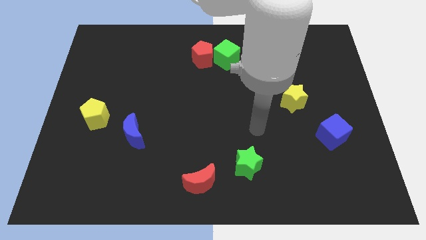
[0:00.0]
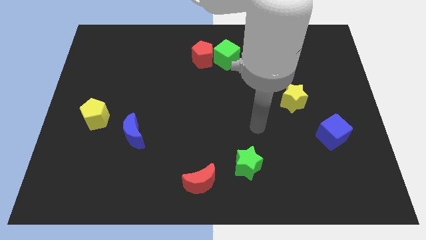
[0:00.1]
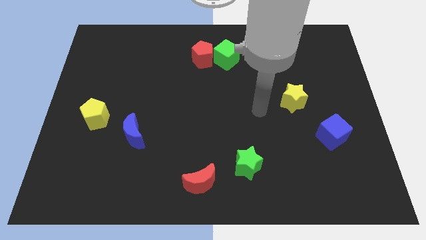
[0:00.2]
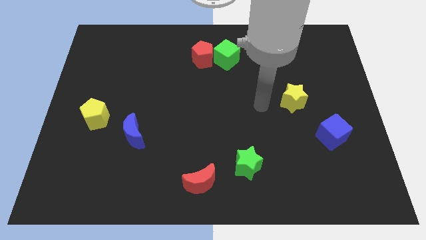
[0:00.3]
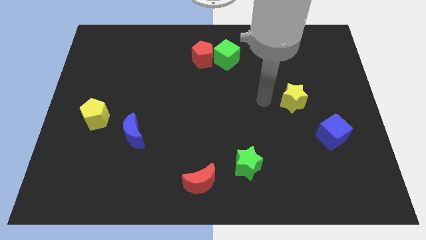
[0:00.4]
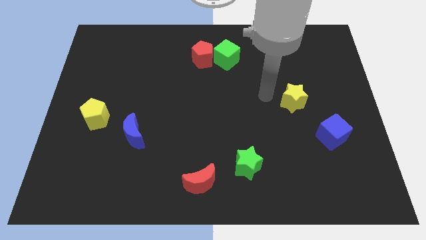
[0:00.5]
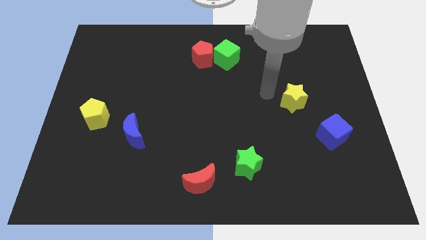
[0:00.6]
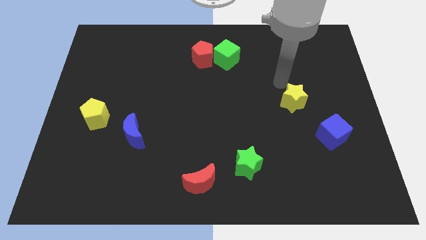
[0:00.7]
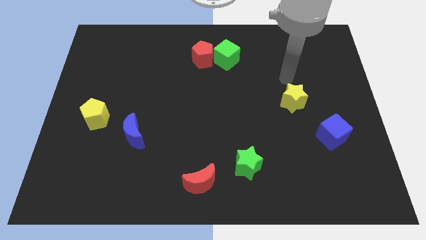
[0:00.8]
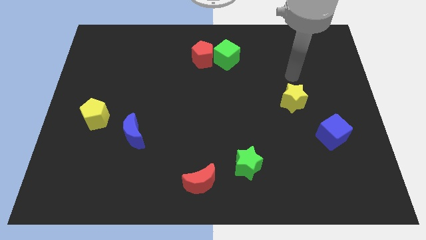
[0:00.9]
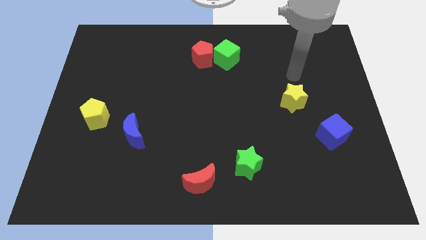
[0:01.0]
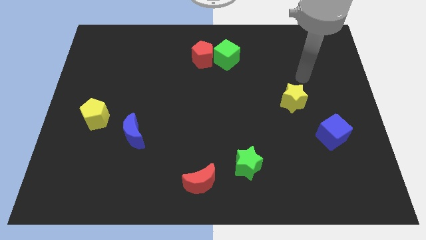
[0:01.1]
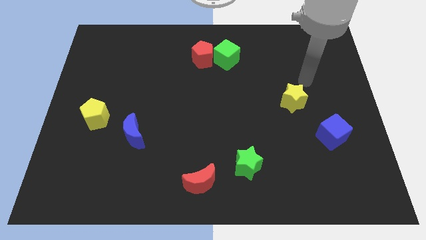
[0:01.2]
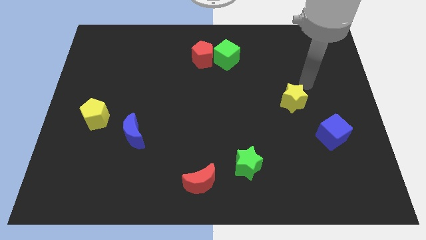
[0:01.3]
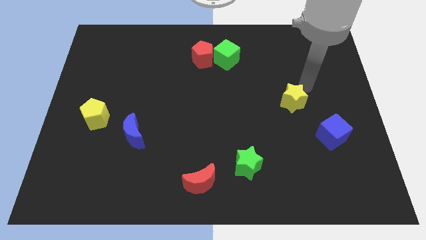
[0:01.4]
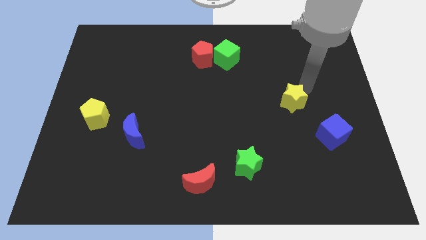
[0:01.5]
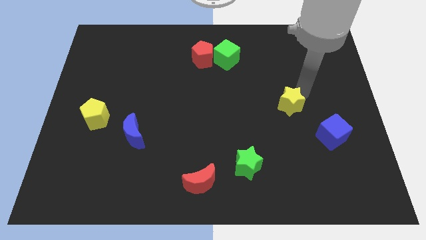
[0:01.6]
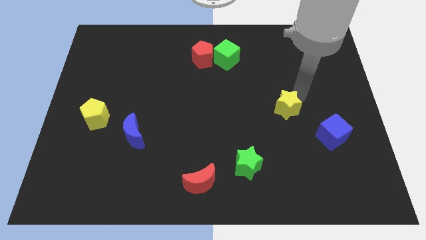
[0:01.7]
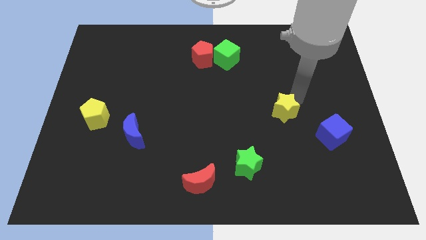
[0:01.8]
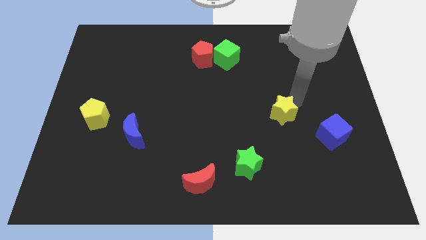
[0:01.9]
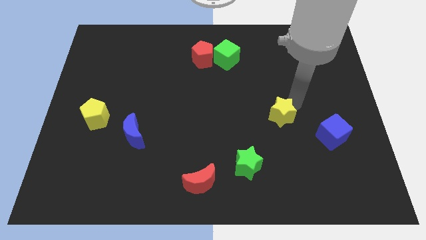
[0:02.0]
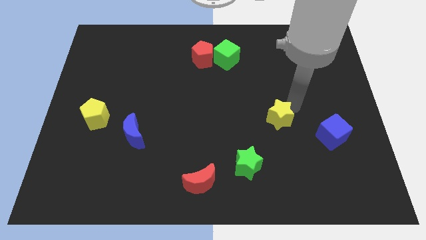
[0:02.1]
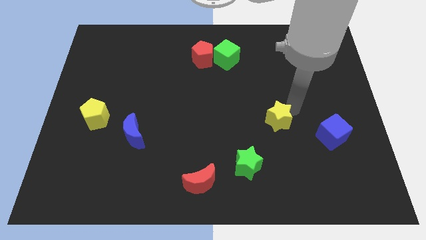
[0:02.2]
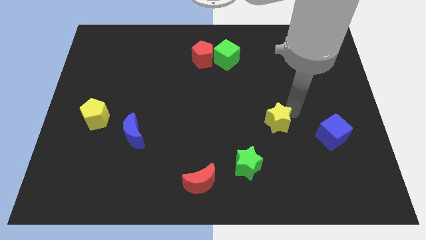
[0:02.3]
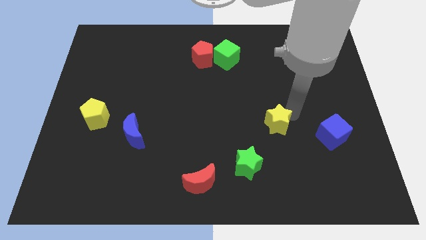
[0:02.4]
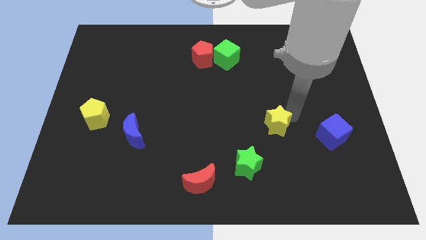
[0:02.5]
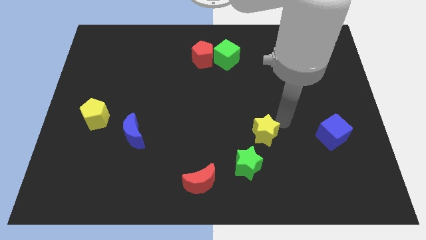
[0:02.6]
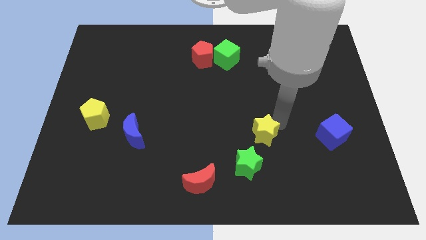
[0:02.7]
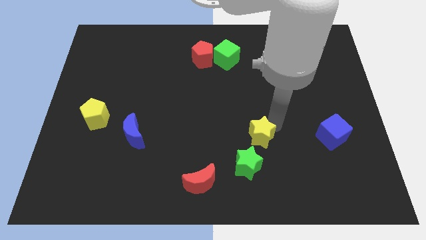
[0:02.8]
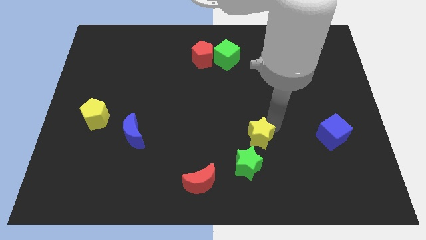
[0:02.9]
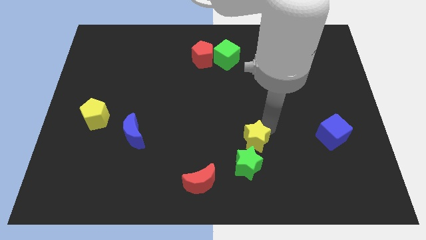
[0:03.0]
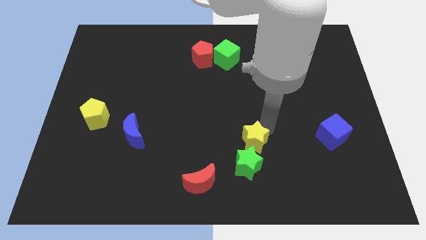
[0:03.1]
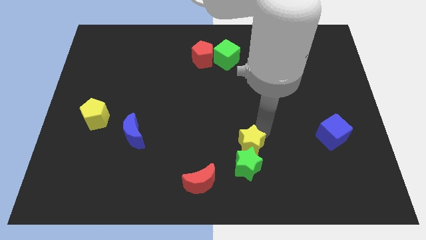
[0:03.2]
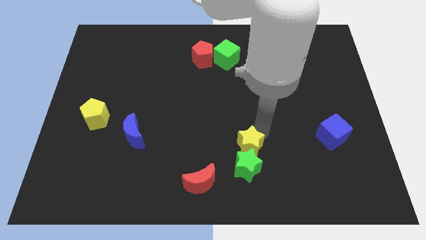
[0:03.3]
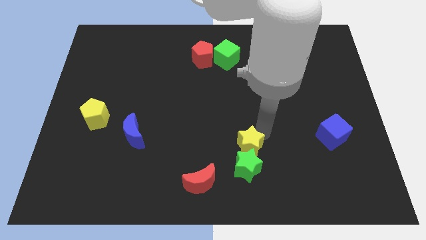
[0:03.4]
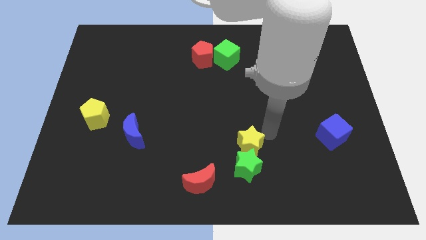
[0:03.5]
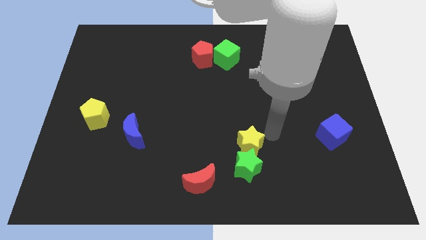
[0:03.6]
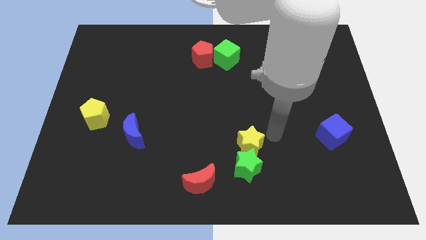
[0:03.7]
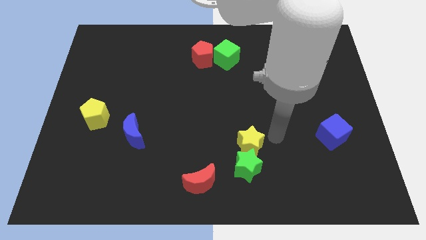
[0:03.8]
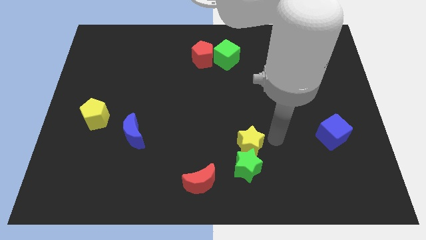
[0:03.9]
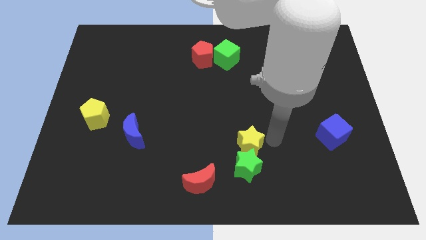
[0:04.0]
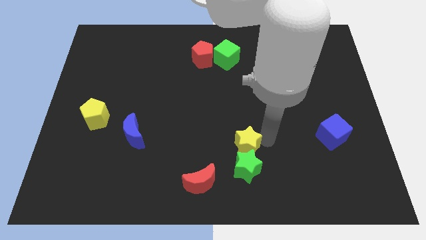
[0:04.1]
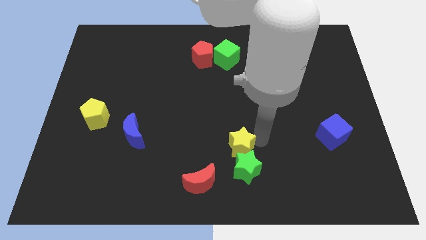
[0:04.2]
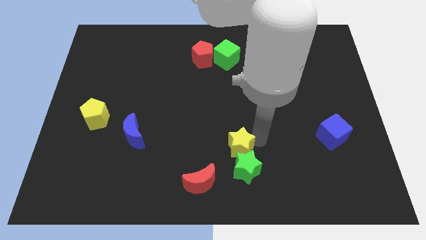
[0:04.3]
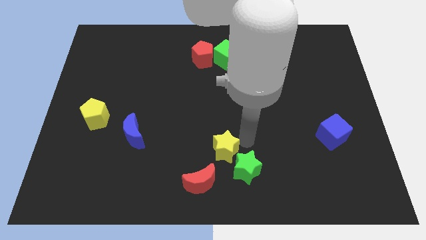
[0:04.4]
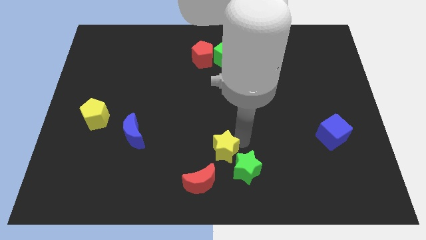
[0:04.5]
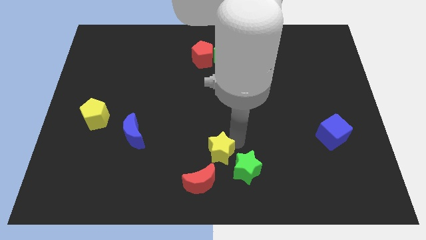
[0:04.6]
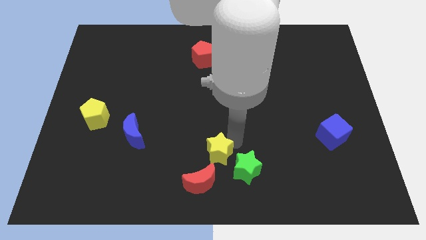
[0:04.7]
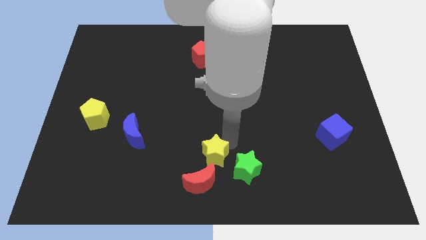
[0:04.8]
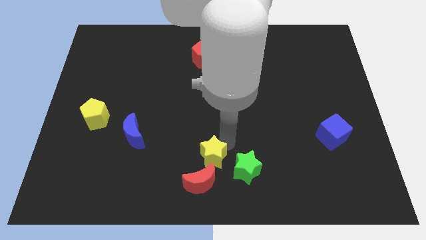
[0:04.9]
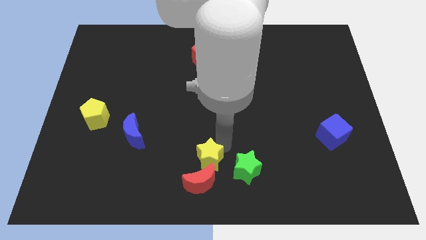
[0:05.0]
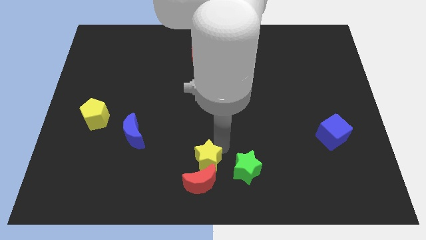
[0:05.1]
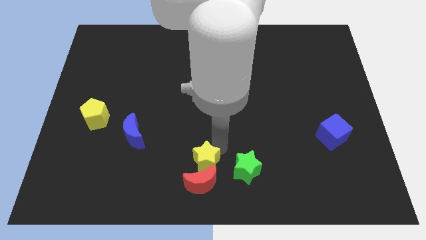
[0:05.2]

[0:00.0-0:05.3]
slide the yellow star to the red moon

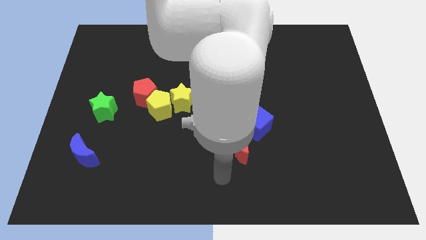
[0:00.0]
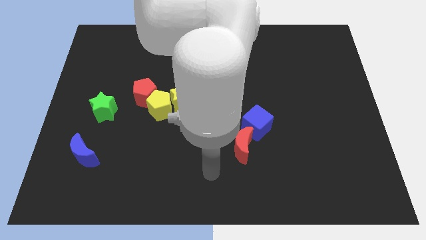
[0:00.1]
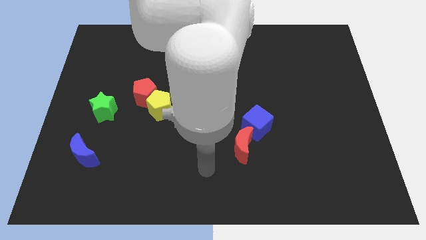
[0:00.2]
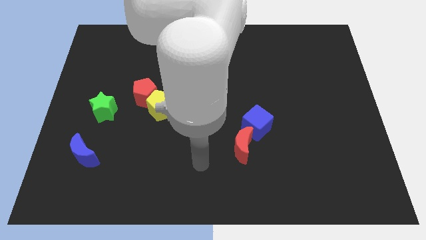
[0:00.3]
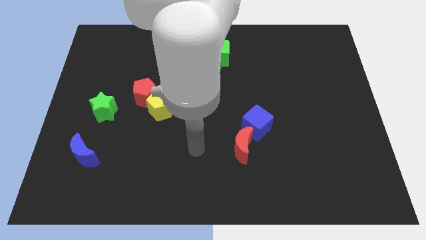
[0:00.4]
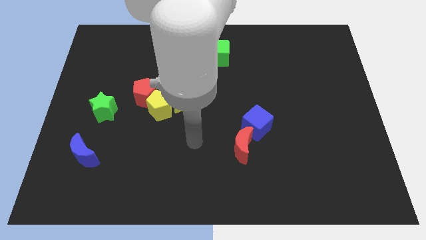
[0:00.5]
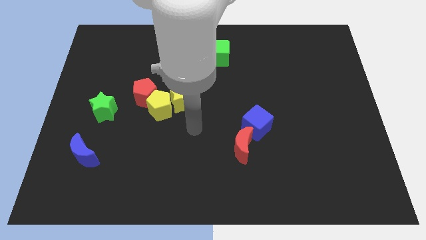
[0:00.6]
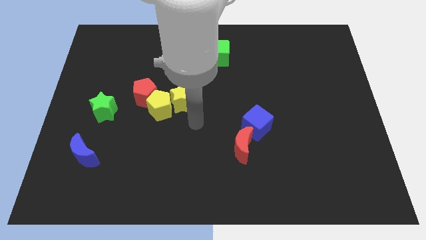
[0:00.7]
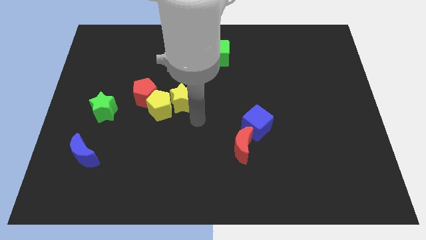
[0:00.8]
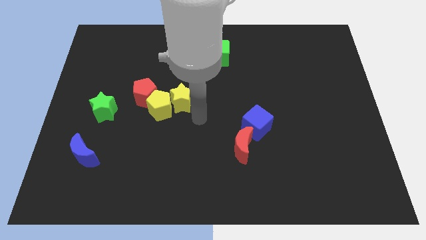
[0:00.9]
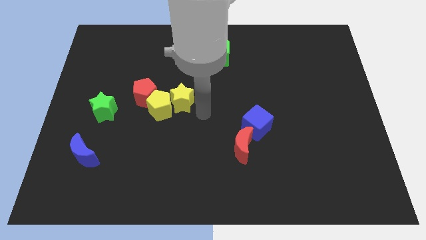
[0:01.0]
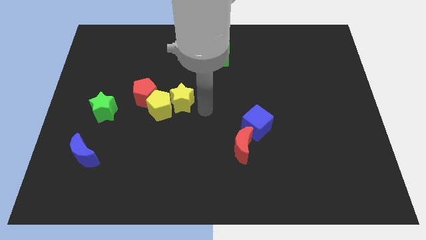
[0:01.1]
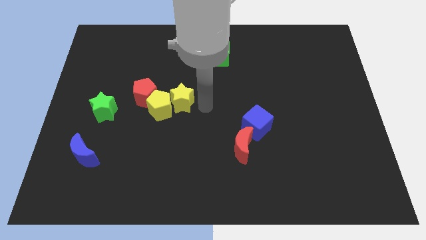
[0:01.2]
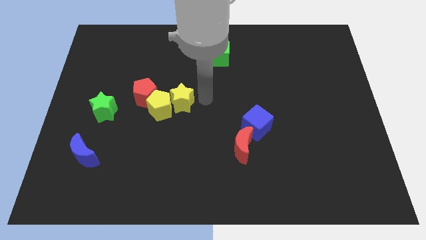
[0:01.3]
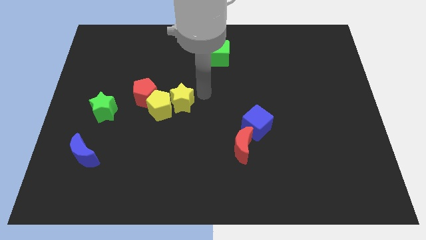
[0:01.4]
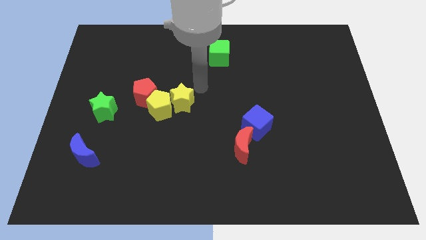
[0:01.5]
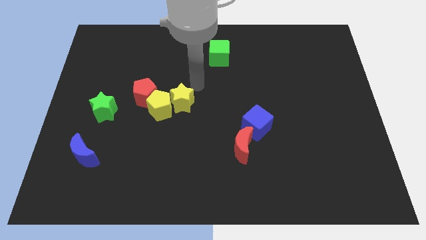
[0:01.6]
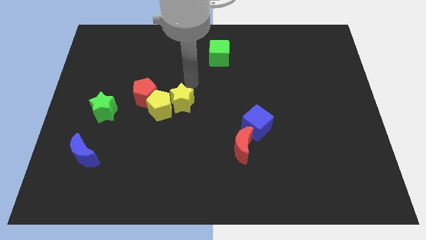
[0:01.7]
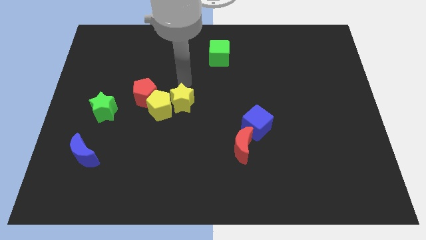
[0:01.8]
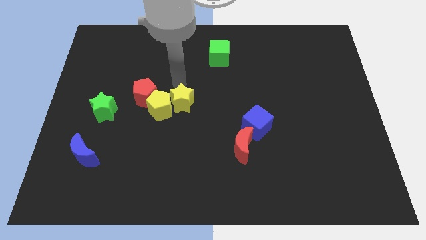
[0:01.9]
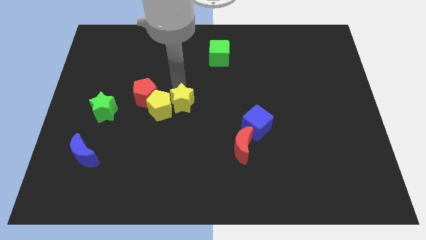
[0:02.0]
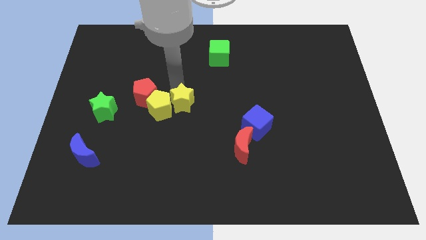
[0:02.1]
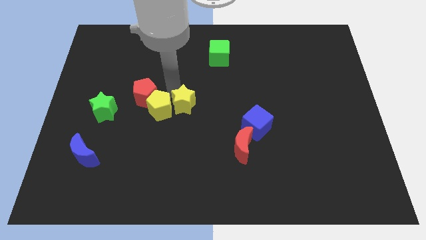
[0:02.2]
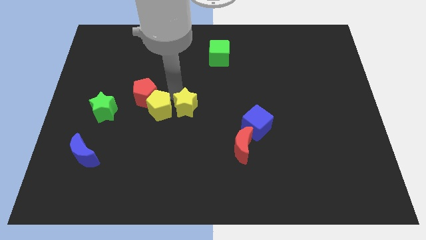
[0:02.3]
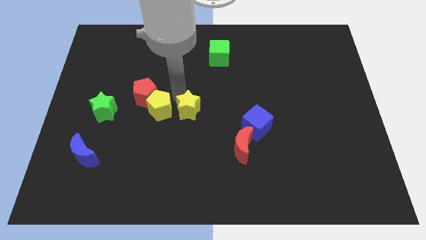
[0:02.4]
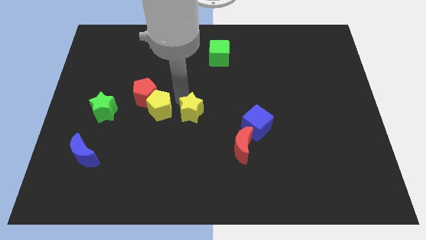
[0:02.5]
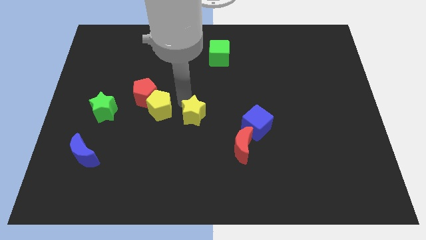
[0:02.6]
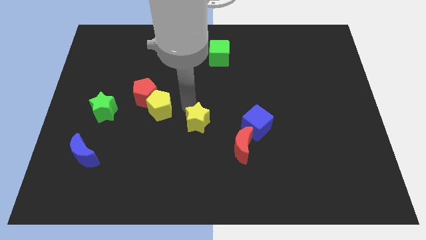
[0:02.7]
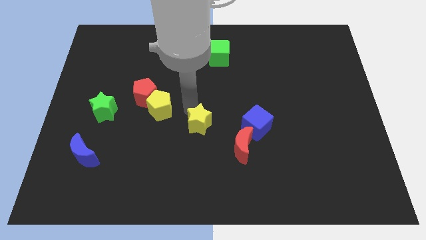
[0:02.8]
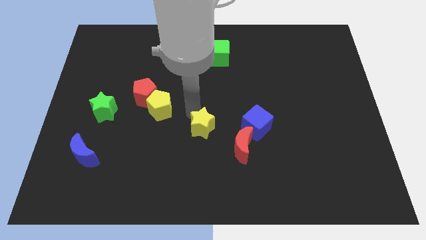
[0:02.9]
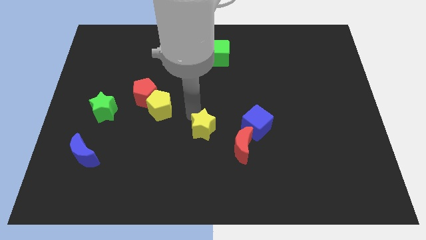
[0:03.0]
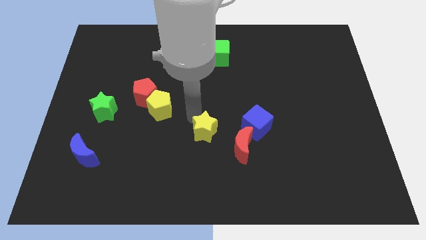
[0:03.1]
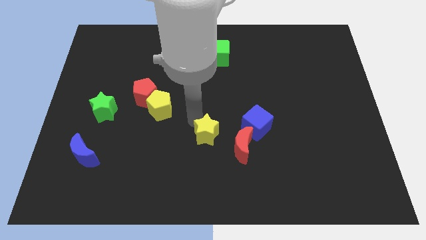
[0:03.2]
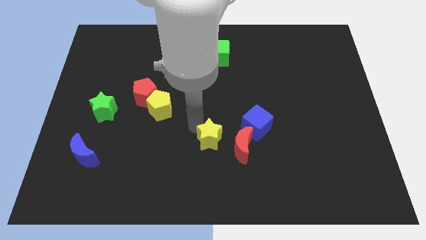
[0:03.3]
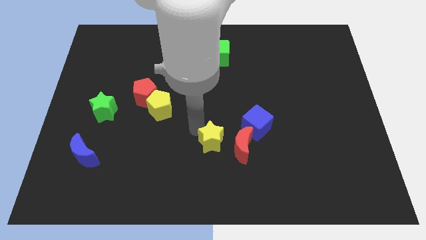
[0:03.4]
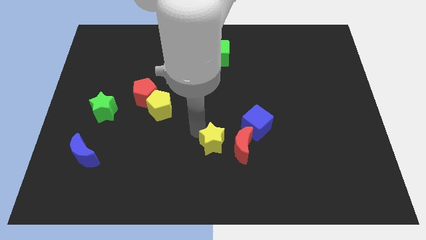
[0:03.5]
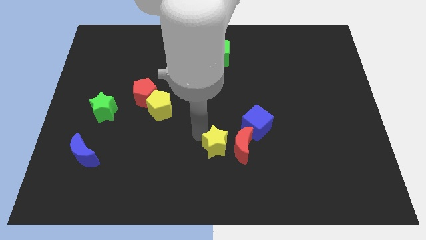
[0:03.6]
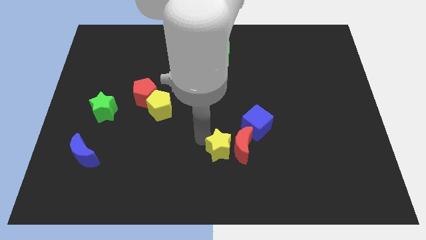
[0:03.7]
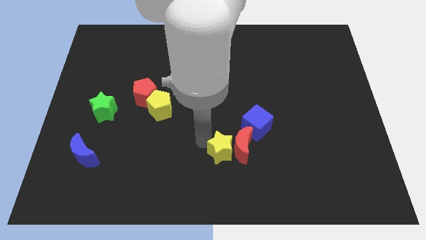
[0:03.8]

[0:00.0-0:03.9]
push the yellow star to the red moon
